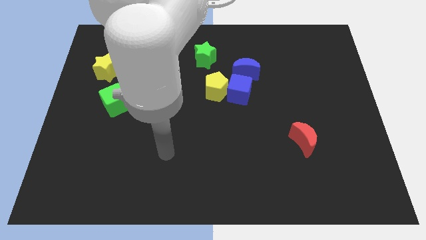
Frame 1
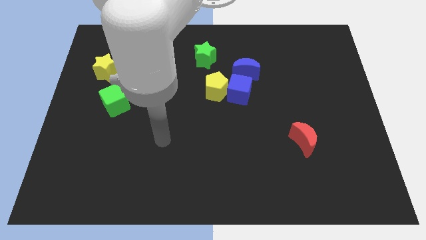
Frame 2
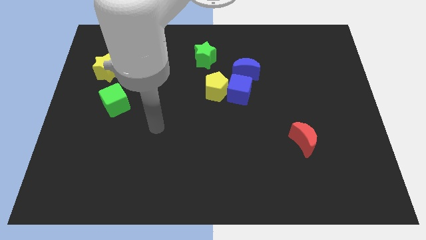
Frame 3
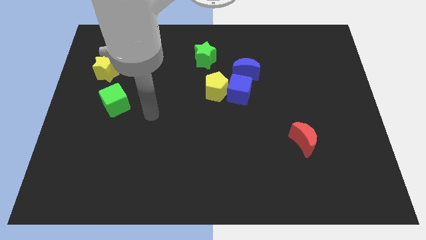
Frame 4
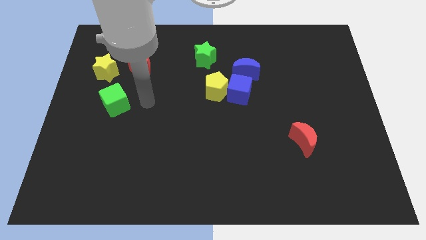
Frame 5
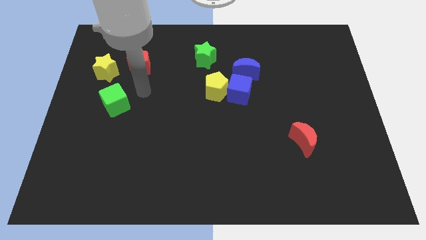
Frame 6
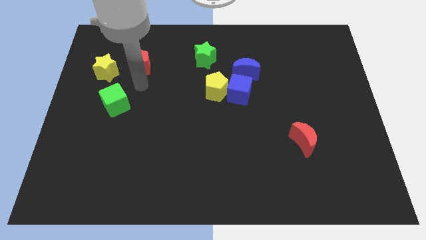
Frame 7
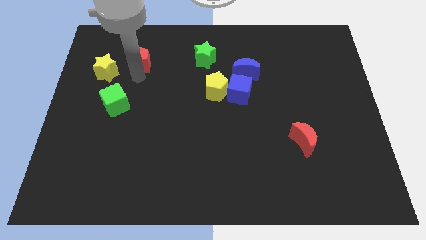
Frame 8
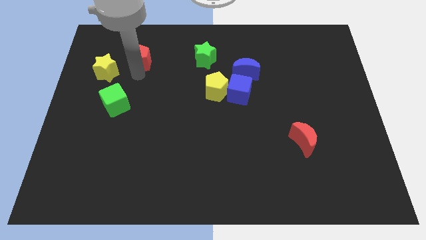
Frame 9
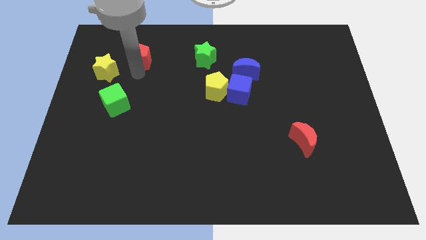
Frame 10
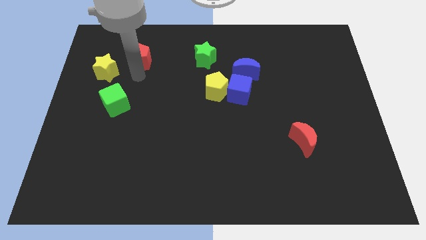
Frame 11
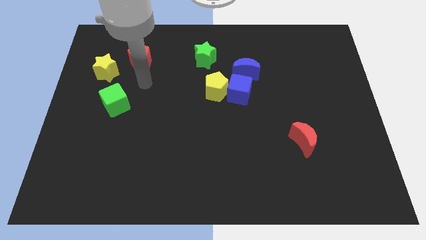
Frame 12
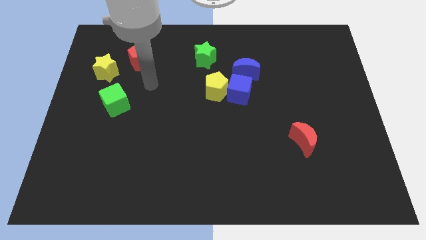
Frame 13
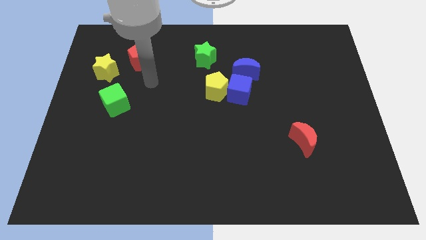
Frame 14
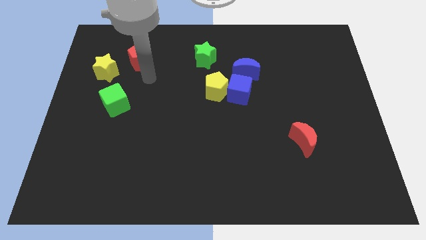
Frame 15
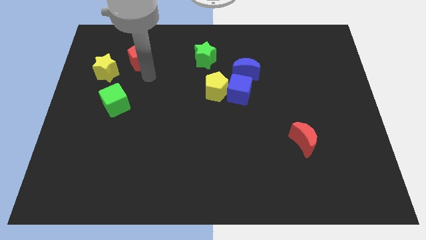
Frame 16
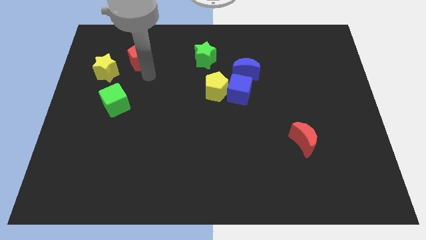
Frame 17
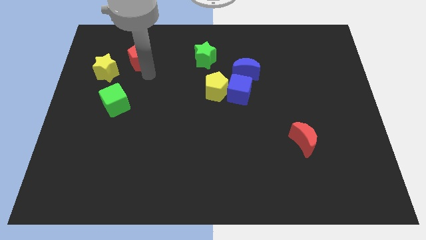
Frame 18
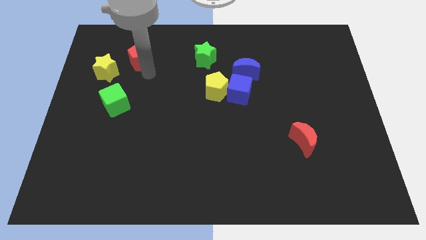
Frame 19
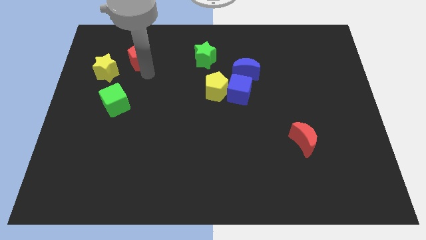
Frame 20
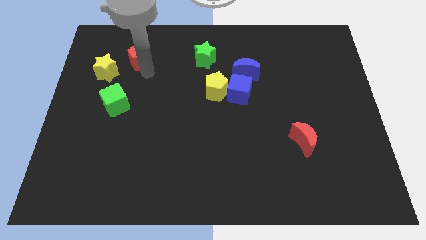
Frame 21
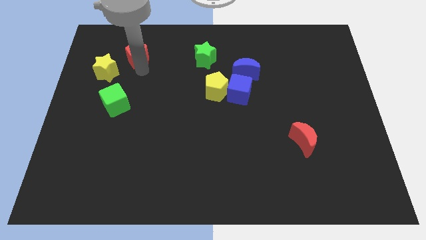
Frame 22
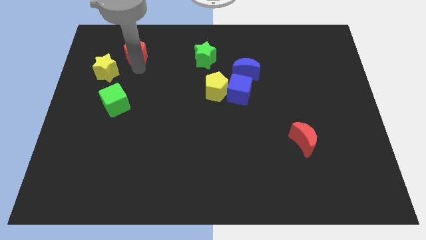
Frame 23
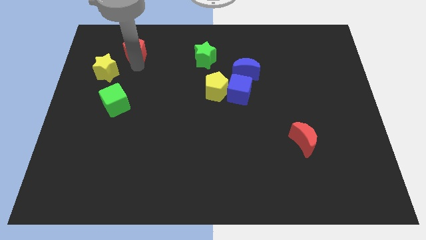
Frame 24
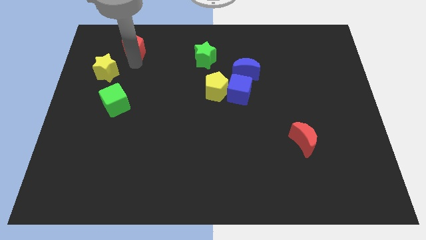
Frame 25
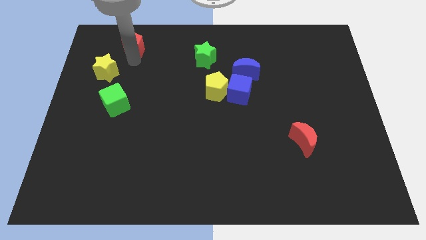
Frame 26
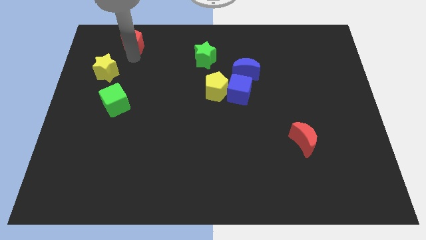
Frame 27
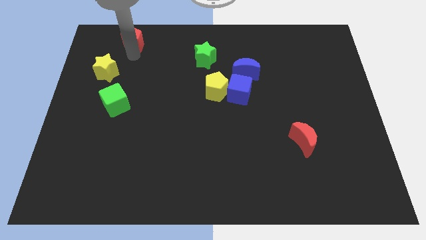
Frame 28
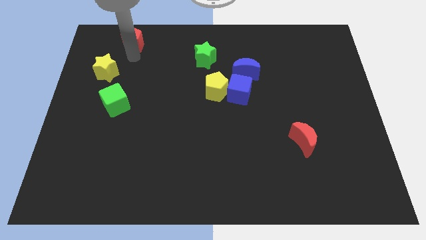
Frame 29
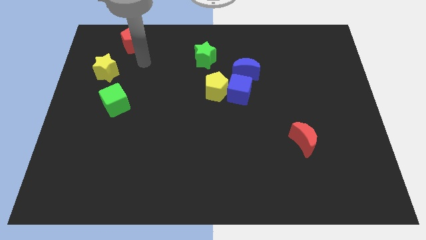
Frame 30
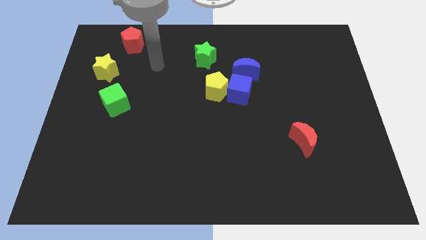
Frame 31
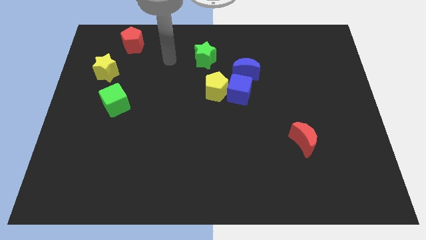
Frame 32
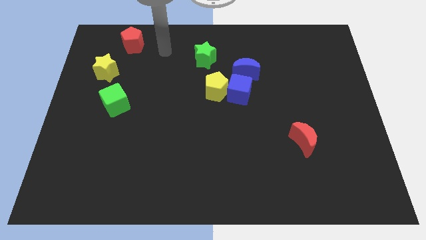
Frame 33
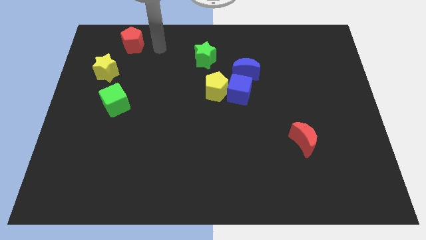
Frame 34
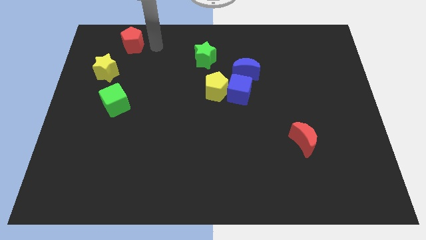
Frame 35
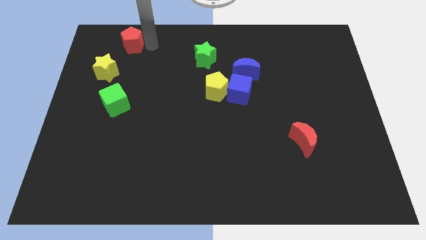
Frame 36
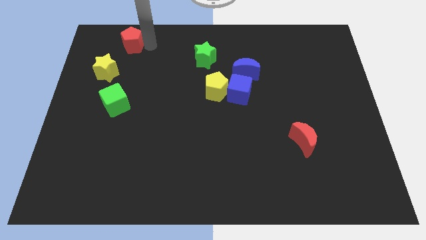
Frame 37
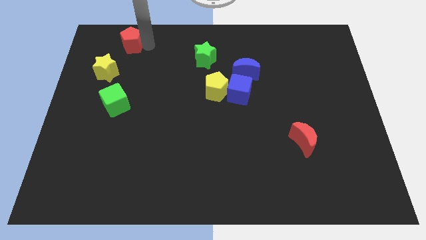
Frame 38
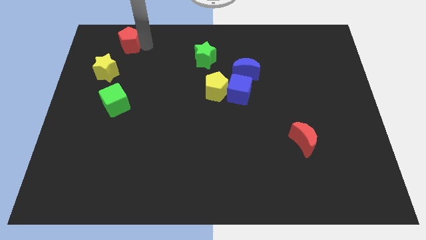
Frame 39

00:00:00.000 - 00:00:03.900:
slightly push the red pentagon upward

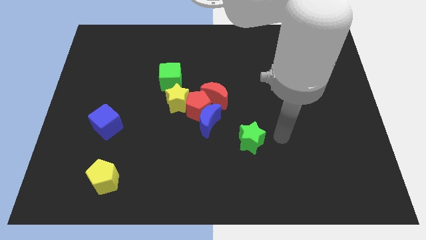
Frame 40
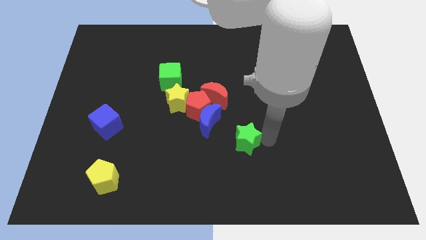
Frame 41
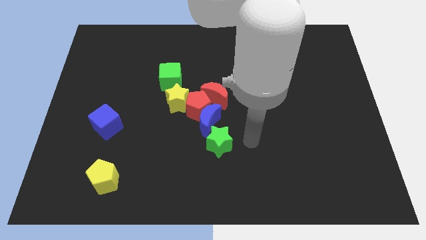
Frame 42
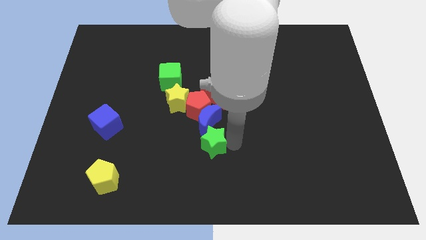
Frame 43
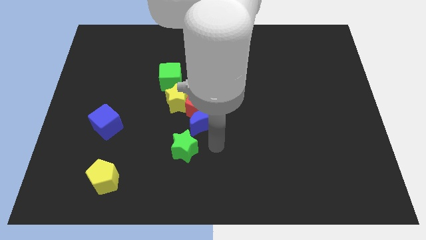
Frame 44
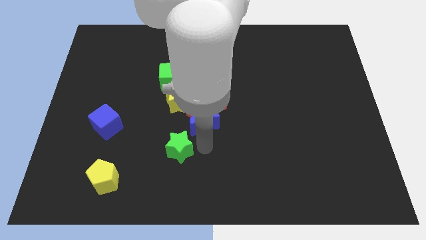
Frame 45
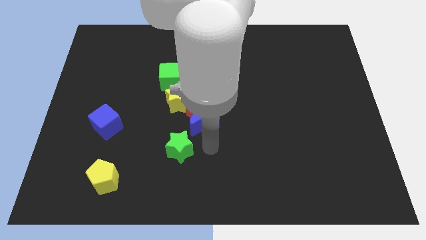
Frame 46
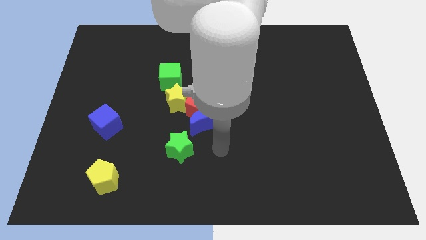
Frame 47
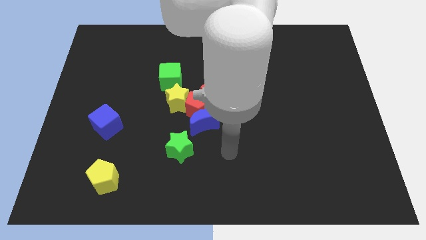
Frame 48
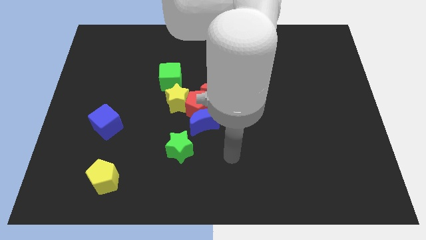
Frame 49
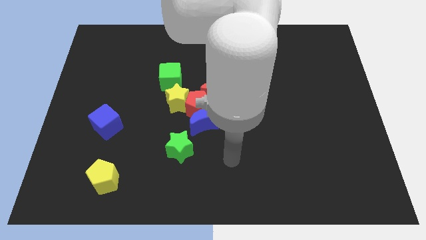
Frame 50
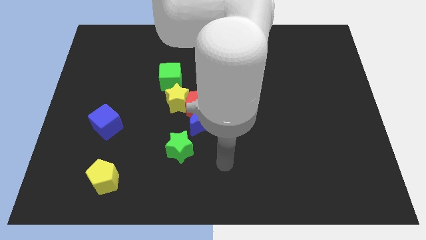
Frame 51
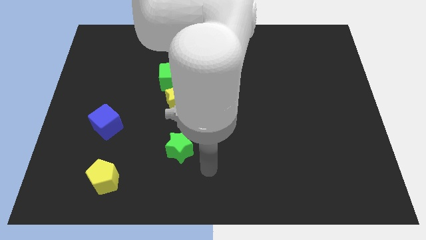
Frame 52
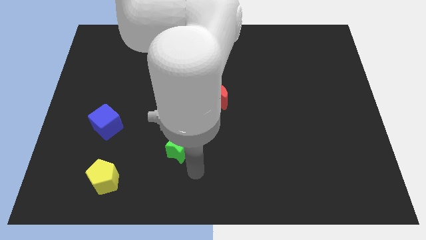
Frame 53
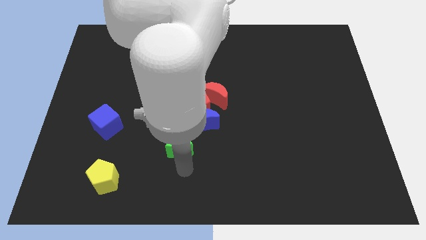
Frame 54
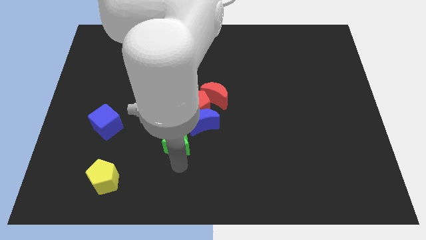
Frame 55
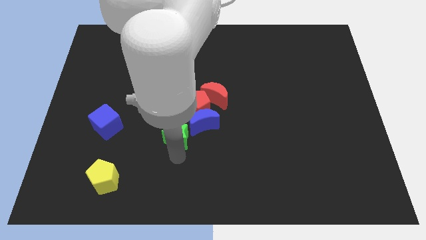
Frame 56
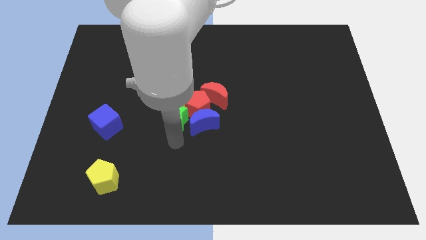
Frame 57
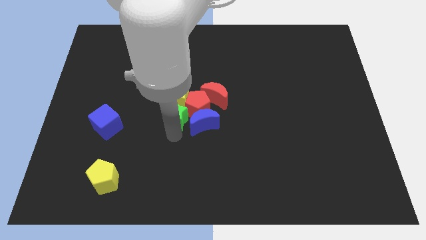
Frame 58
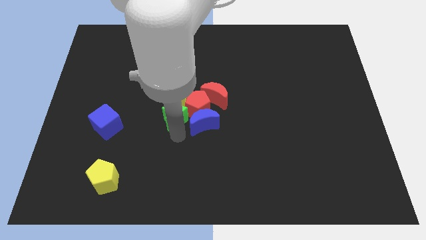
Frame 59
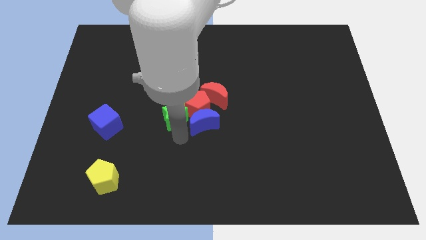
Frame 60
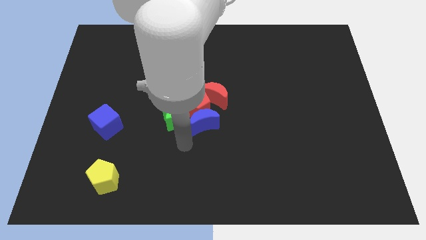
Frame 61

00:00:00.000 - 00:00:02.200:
push the green star to the bottom of the yellow star

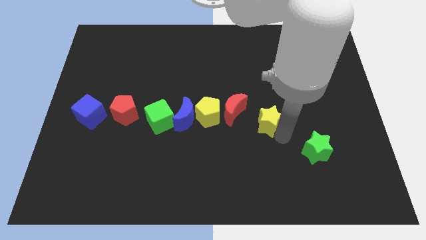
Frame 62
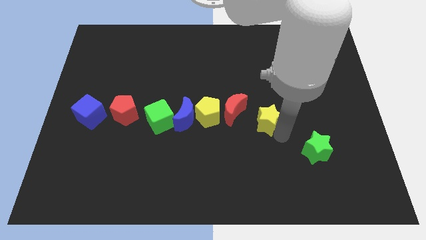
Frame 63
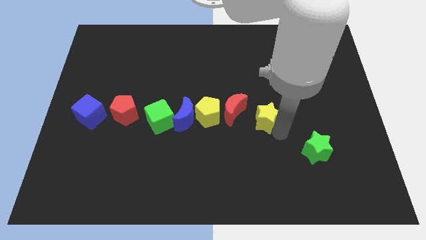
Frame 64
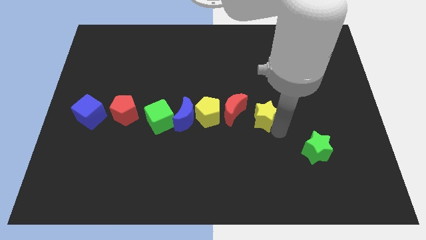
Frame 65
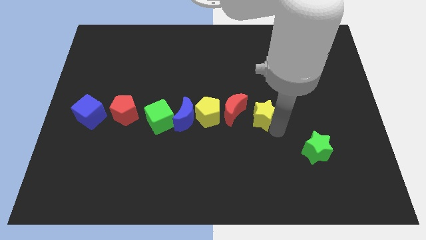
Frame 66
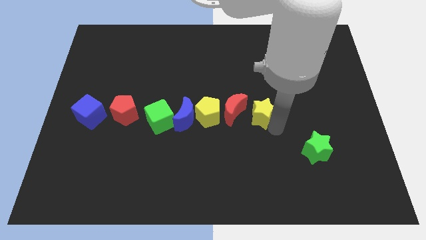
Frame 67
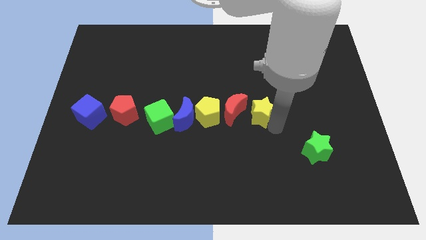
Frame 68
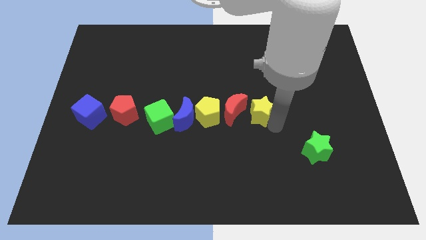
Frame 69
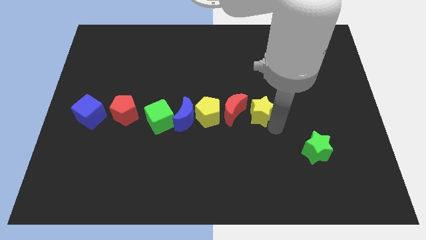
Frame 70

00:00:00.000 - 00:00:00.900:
place yellow star on the right side of the red crescent

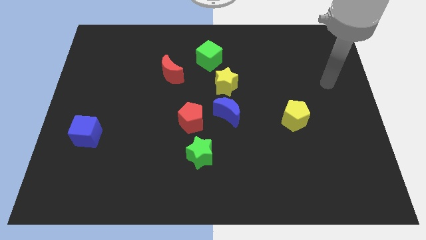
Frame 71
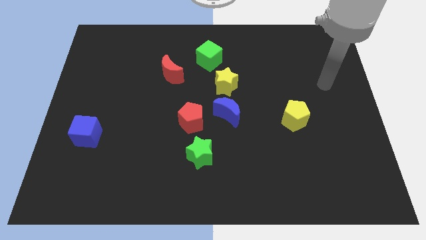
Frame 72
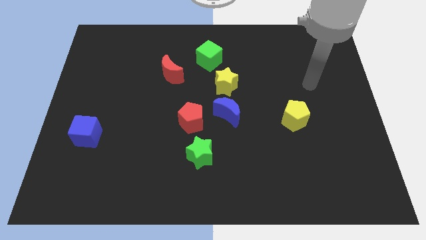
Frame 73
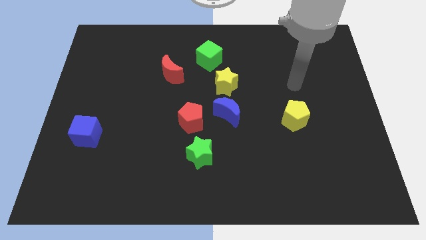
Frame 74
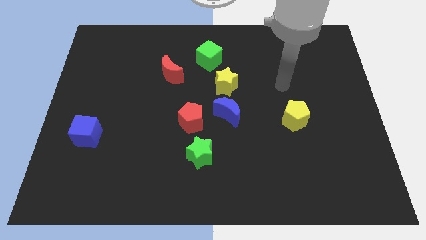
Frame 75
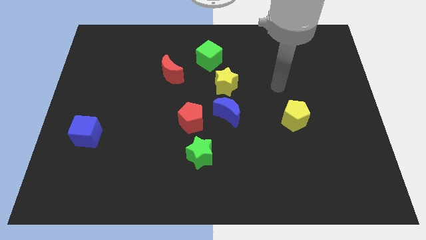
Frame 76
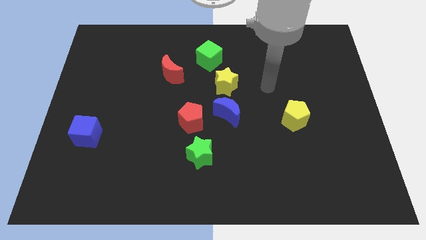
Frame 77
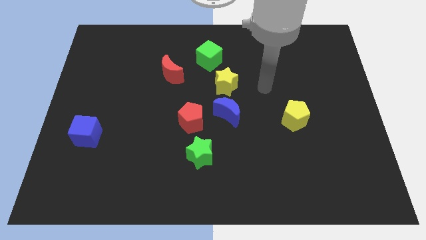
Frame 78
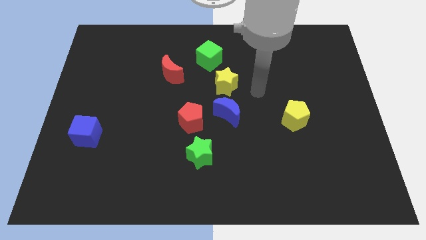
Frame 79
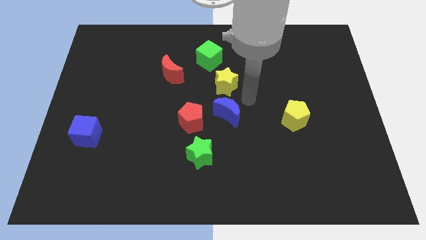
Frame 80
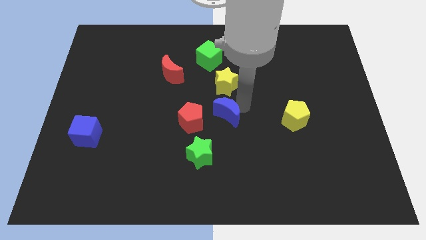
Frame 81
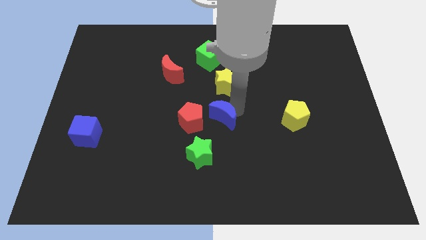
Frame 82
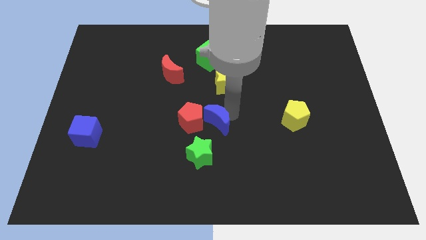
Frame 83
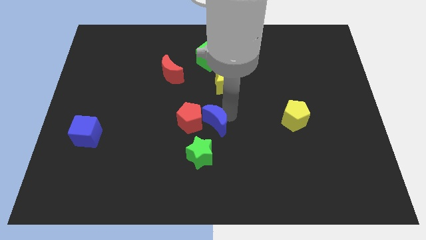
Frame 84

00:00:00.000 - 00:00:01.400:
slide the blue crescent into the right side of the red pentagon

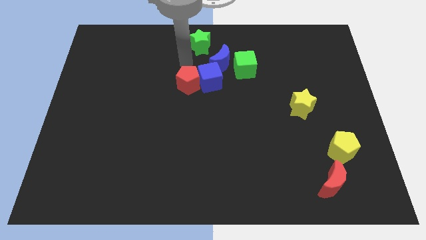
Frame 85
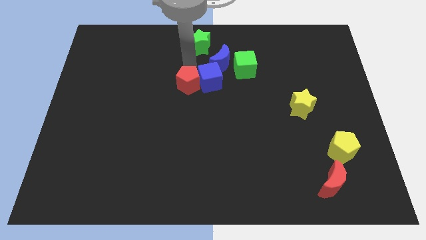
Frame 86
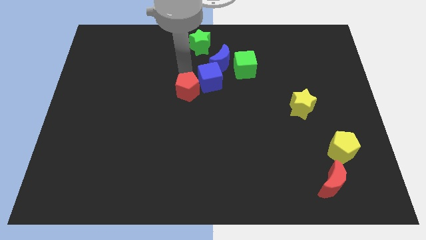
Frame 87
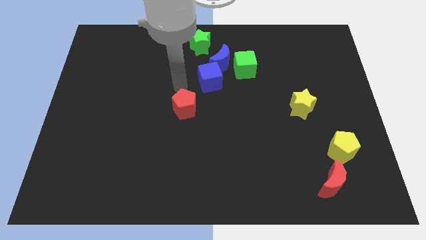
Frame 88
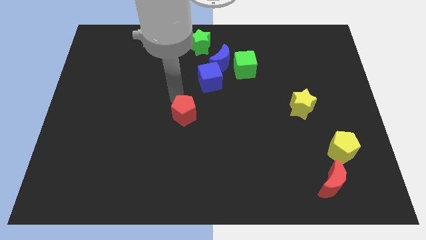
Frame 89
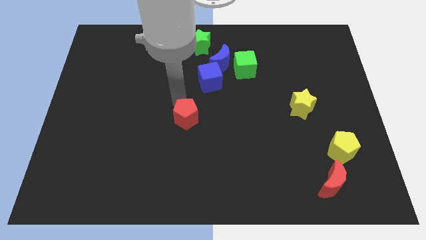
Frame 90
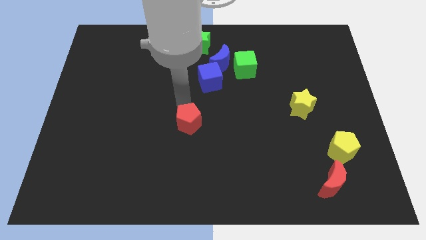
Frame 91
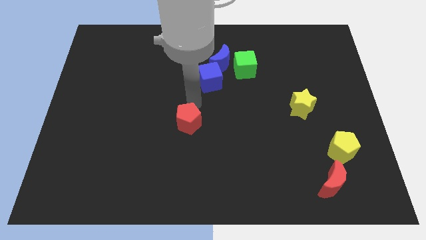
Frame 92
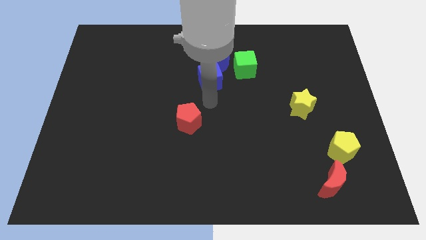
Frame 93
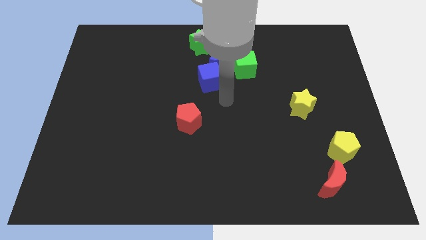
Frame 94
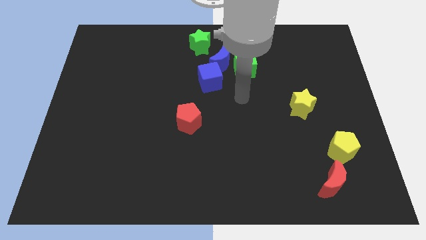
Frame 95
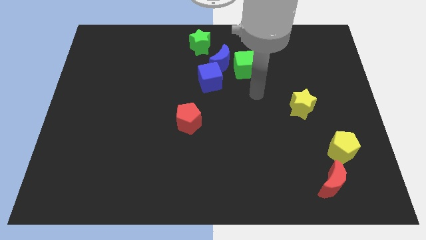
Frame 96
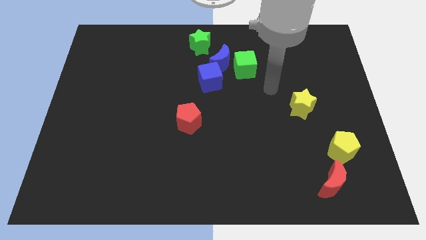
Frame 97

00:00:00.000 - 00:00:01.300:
separate red pentagon from the blue cube
